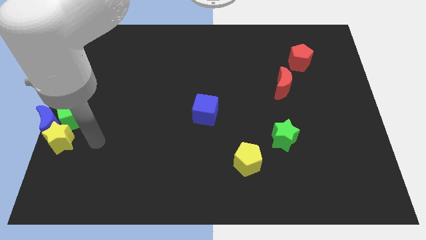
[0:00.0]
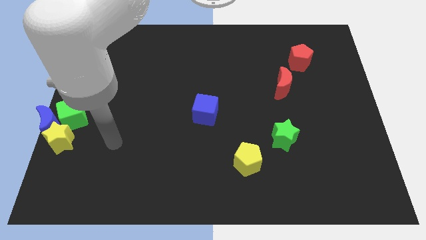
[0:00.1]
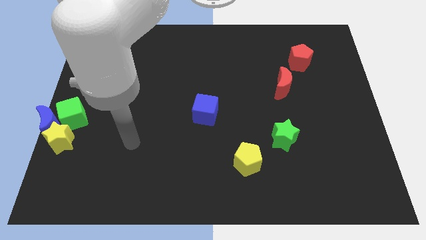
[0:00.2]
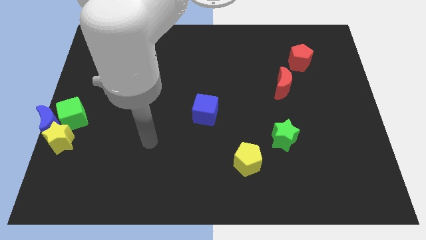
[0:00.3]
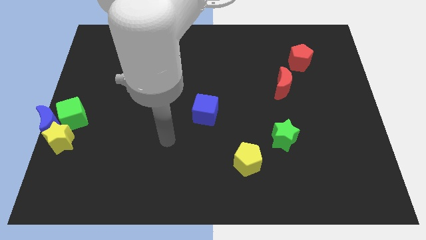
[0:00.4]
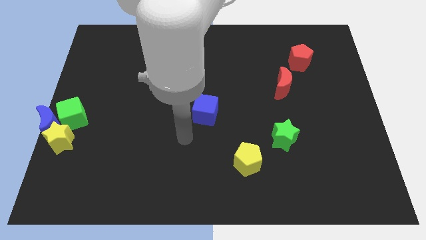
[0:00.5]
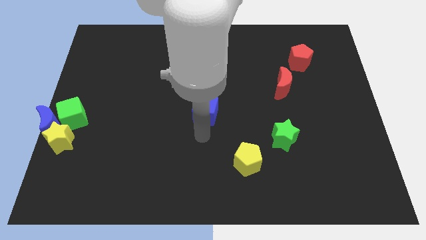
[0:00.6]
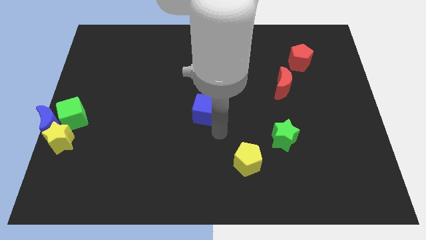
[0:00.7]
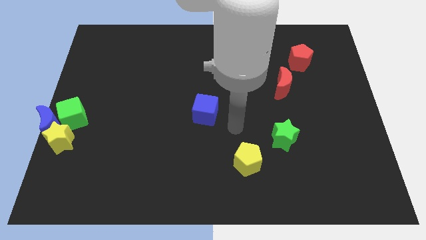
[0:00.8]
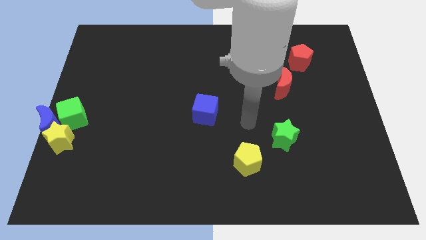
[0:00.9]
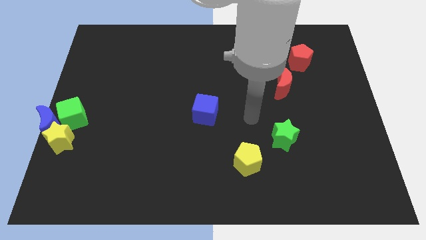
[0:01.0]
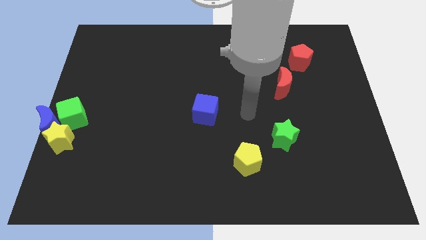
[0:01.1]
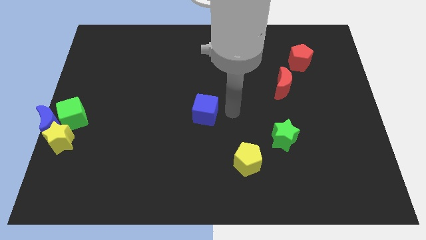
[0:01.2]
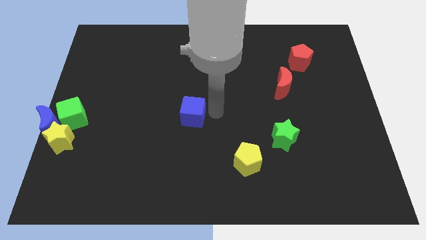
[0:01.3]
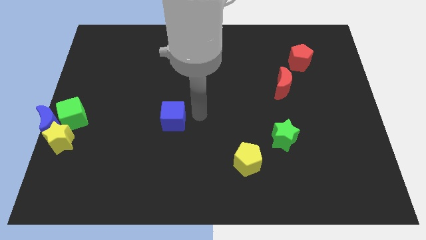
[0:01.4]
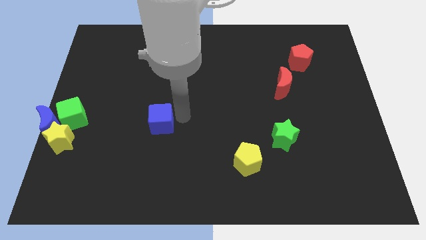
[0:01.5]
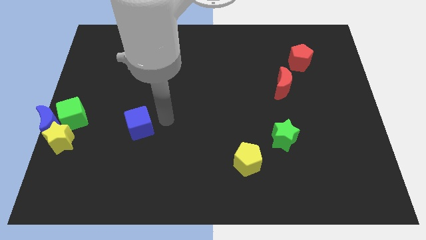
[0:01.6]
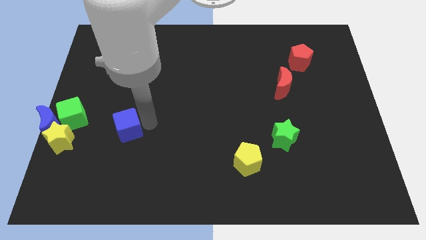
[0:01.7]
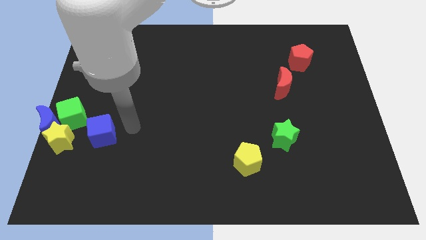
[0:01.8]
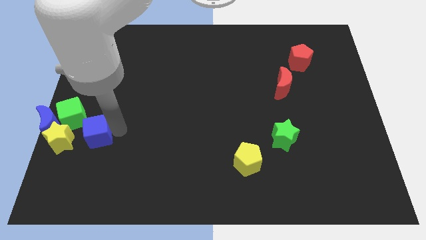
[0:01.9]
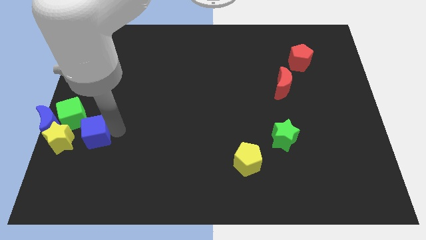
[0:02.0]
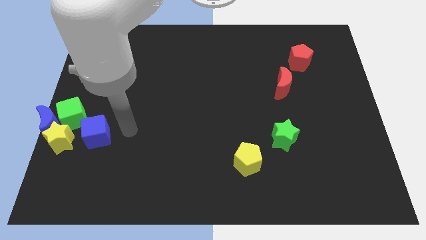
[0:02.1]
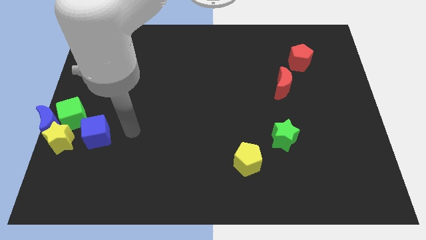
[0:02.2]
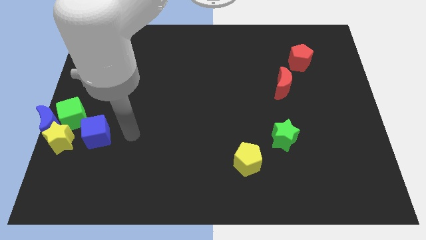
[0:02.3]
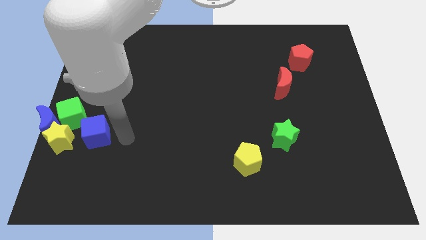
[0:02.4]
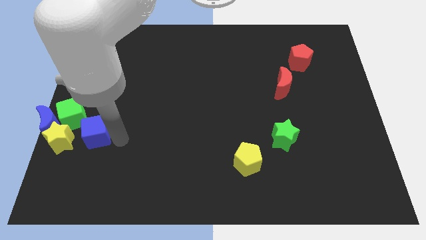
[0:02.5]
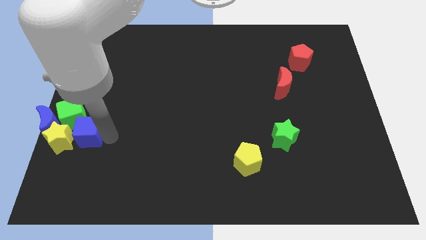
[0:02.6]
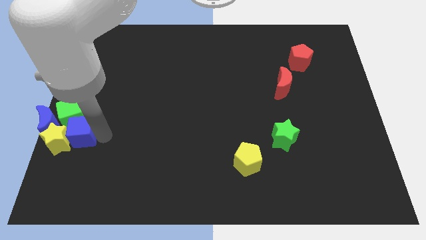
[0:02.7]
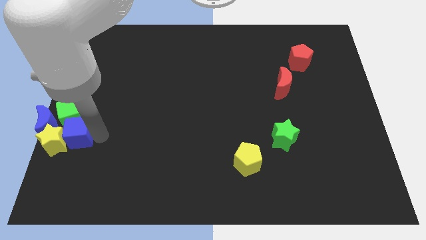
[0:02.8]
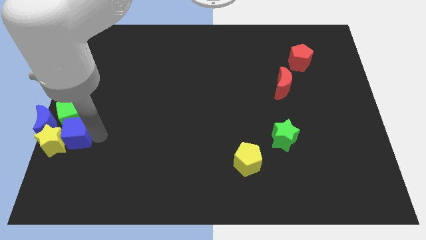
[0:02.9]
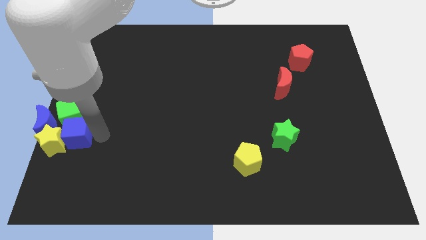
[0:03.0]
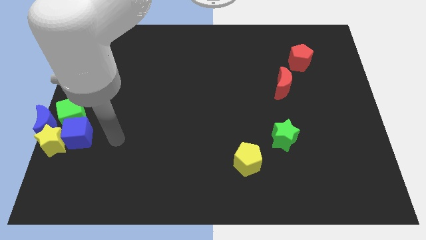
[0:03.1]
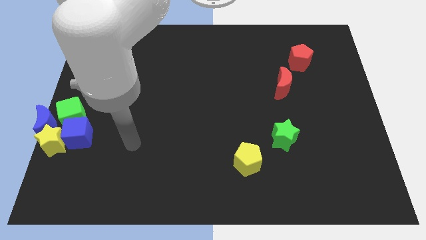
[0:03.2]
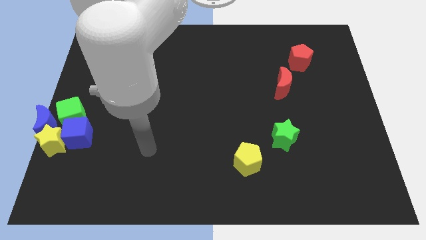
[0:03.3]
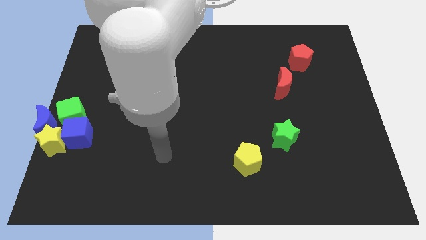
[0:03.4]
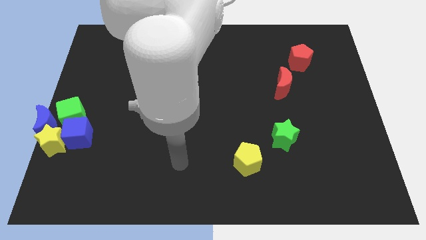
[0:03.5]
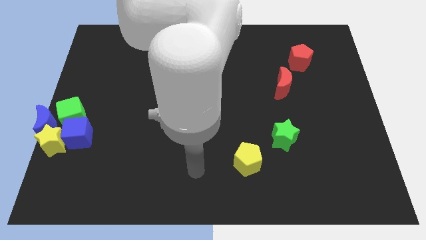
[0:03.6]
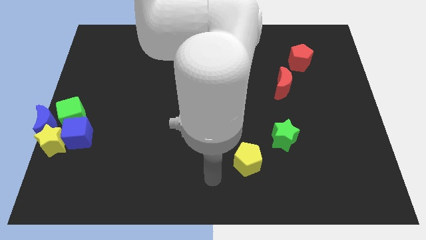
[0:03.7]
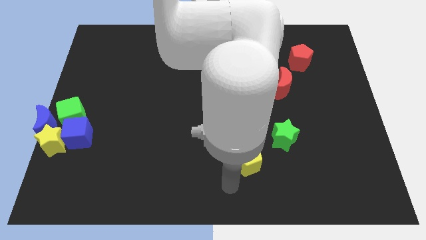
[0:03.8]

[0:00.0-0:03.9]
push the blue cube into the group of blocks

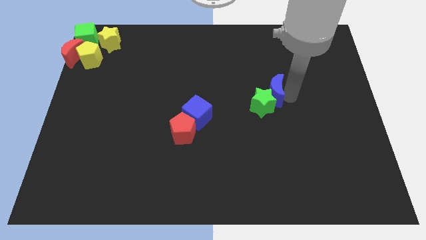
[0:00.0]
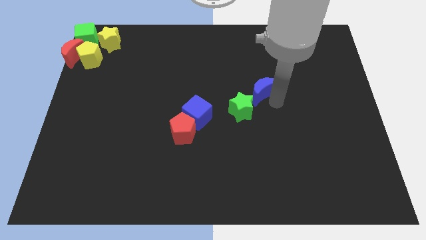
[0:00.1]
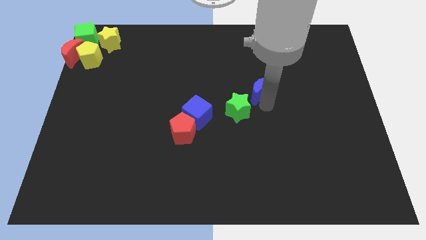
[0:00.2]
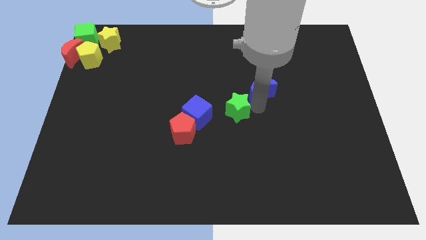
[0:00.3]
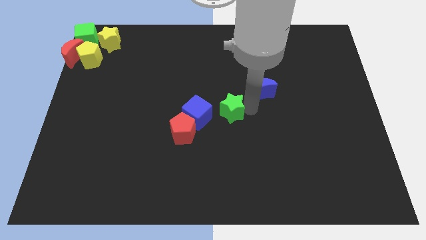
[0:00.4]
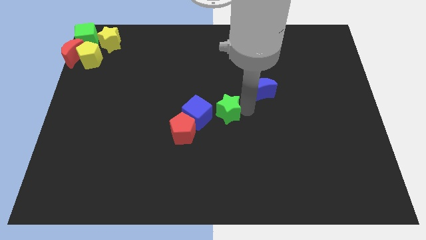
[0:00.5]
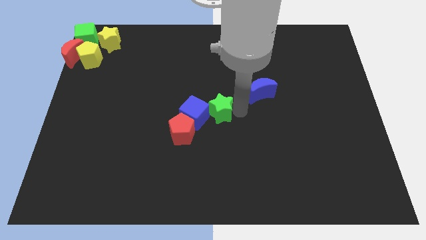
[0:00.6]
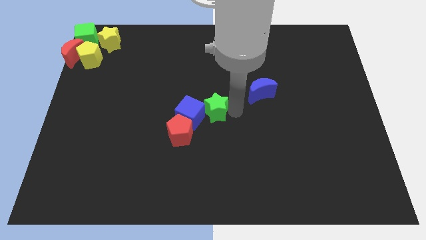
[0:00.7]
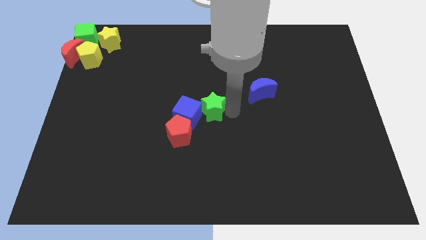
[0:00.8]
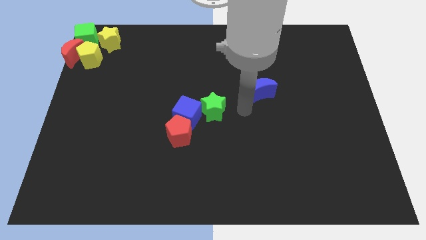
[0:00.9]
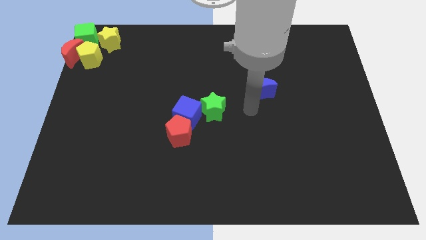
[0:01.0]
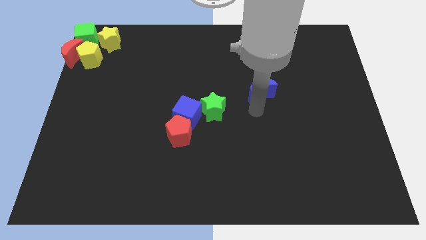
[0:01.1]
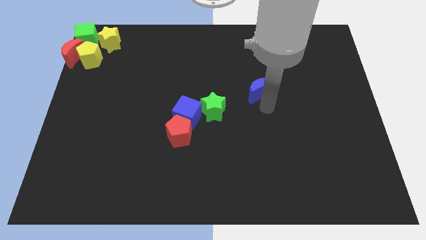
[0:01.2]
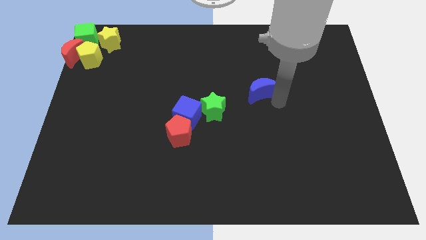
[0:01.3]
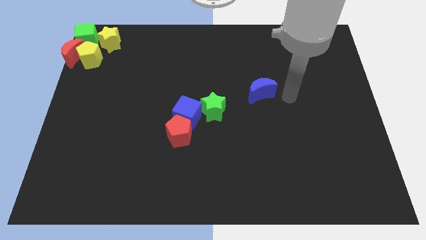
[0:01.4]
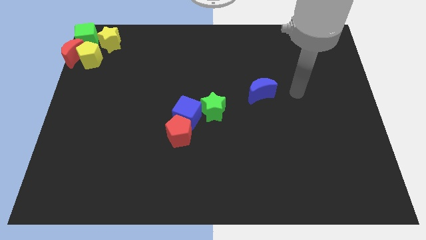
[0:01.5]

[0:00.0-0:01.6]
put the green star at the center of the board

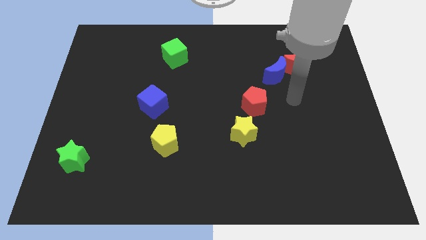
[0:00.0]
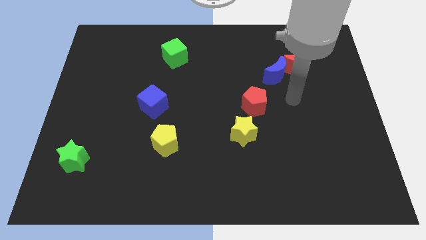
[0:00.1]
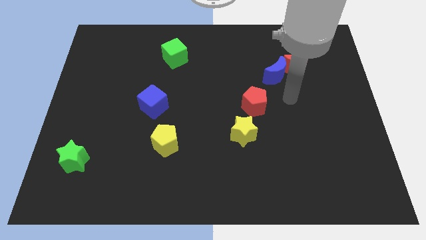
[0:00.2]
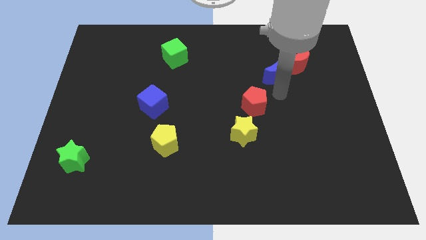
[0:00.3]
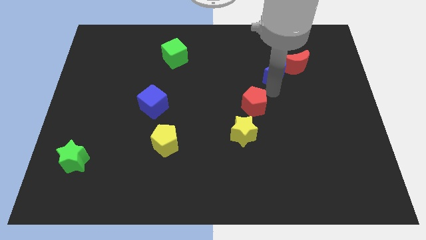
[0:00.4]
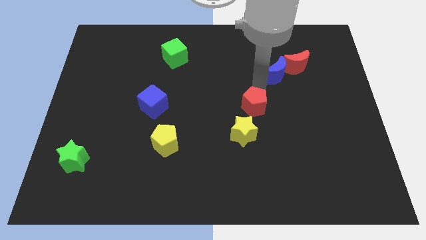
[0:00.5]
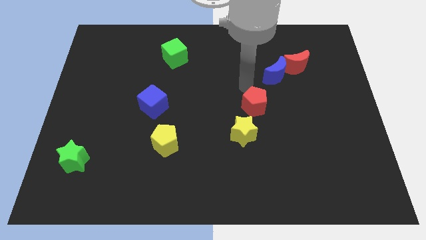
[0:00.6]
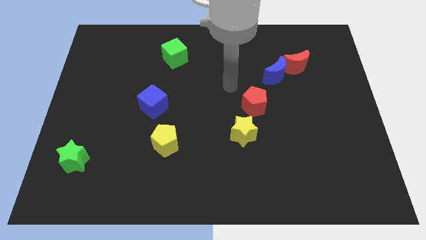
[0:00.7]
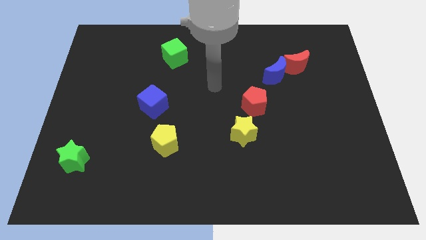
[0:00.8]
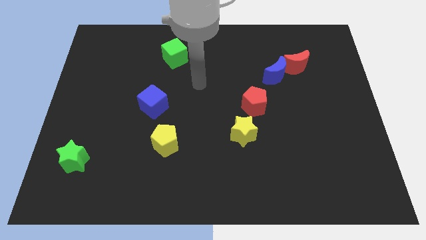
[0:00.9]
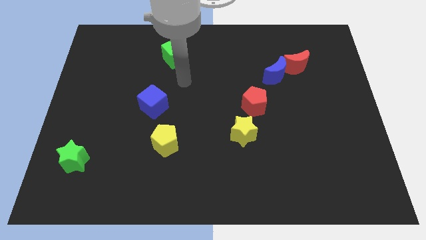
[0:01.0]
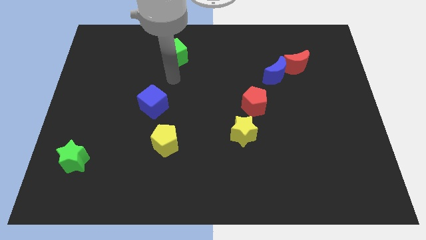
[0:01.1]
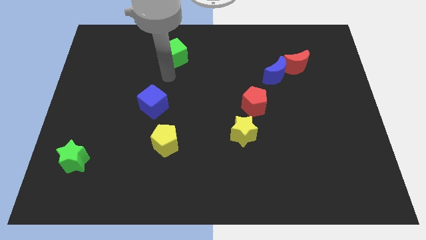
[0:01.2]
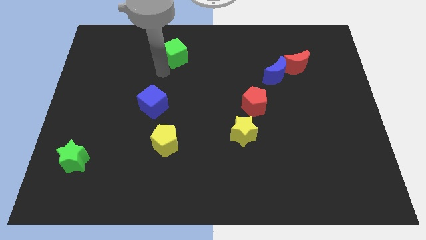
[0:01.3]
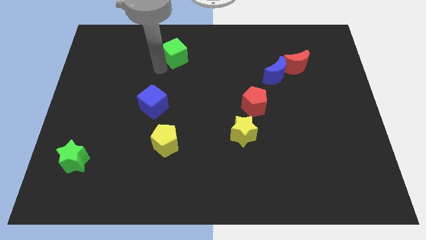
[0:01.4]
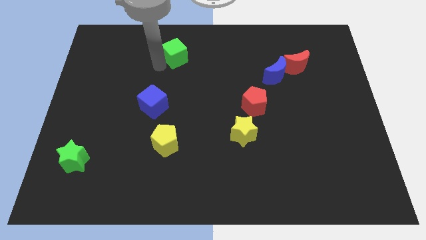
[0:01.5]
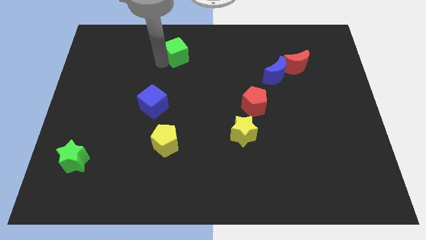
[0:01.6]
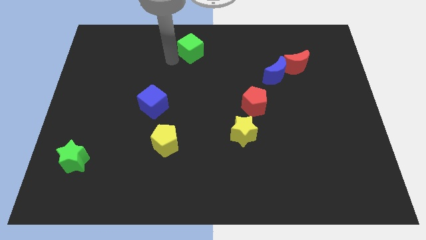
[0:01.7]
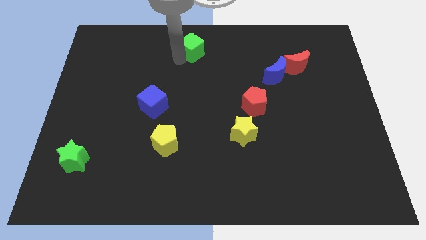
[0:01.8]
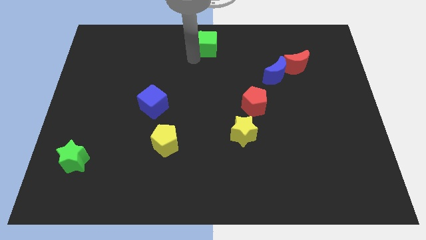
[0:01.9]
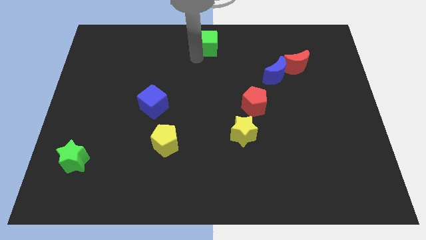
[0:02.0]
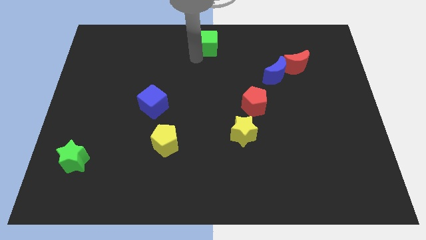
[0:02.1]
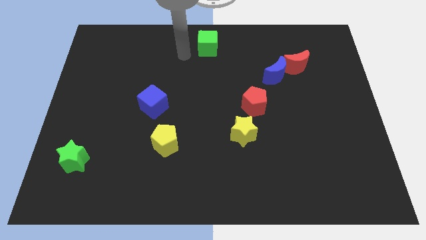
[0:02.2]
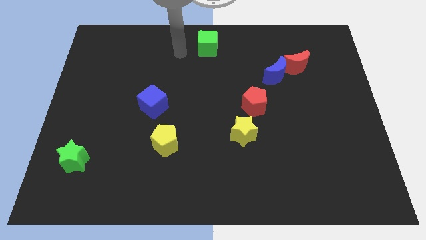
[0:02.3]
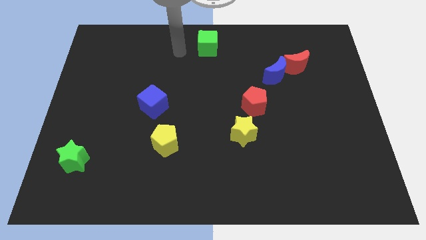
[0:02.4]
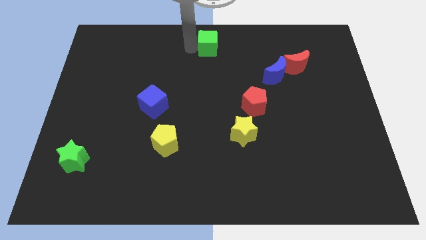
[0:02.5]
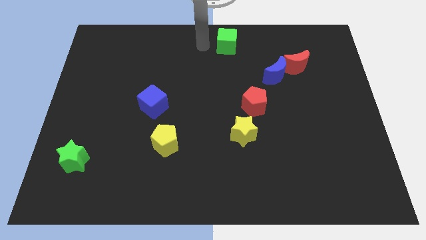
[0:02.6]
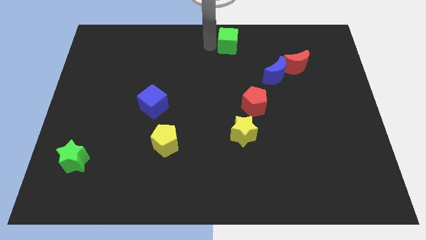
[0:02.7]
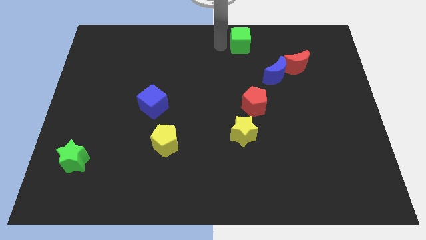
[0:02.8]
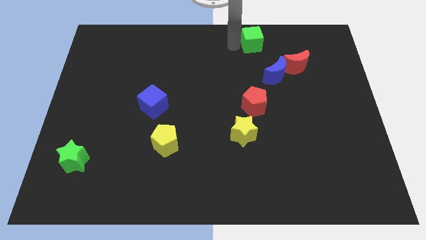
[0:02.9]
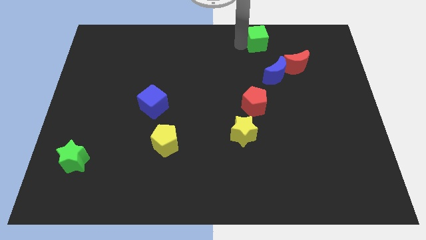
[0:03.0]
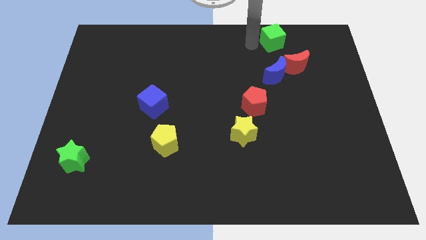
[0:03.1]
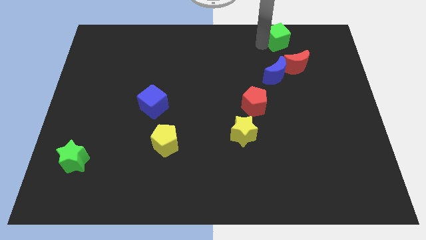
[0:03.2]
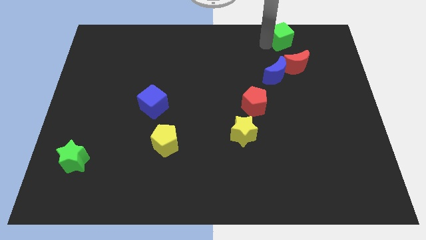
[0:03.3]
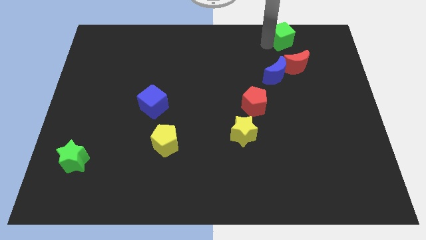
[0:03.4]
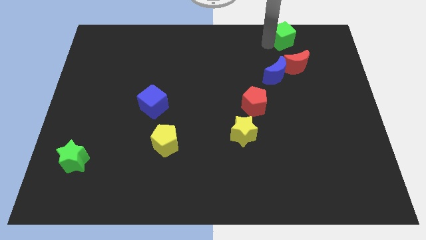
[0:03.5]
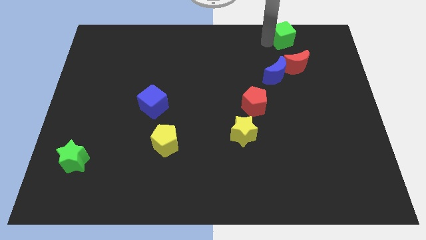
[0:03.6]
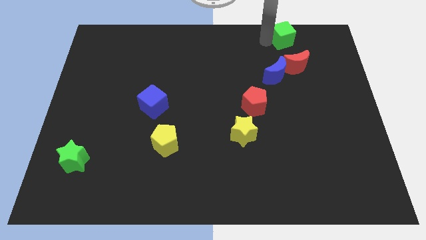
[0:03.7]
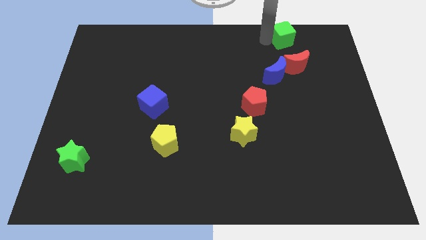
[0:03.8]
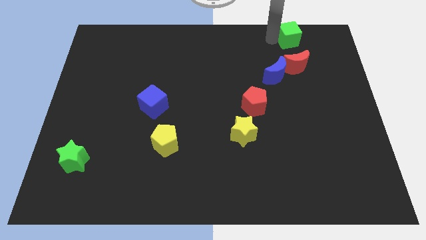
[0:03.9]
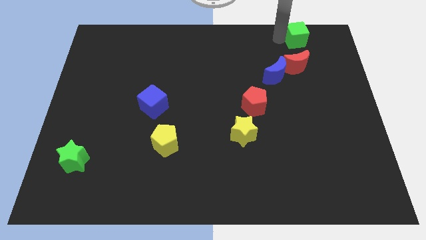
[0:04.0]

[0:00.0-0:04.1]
place the green cube at the top side of the red moon
